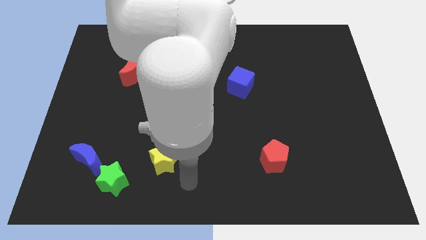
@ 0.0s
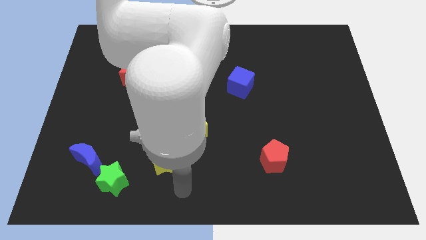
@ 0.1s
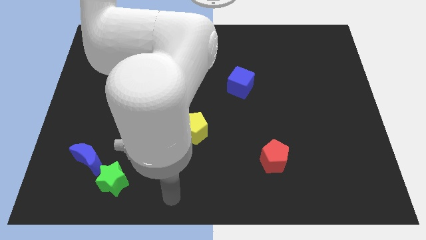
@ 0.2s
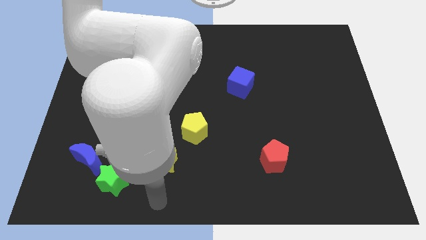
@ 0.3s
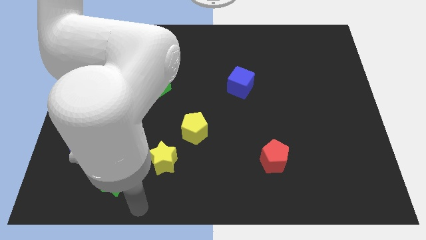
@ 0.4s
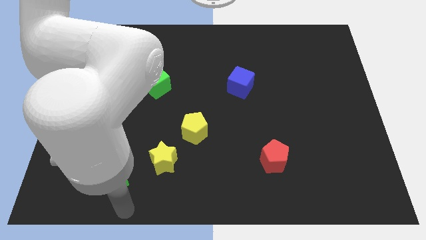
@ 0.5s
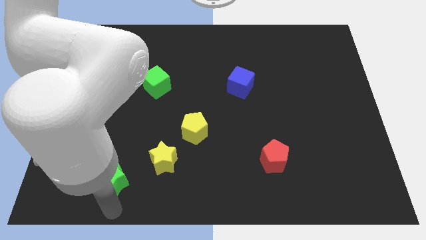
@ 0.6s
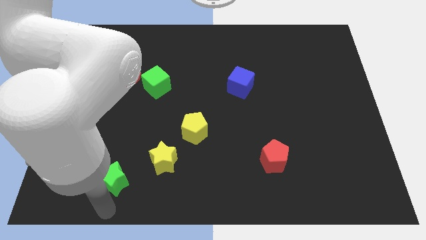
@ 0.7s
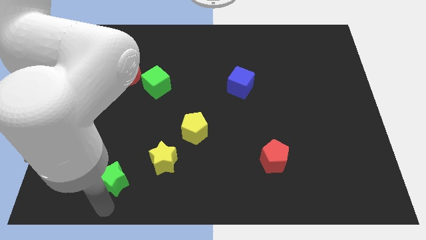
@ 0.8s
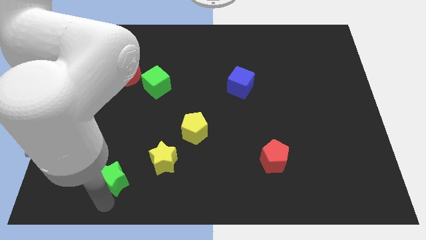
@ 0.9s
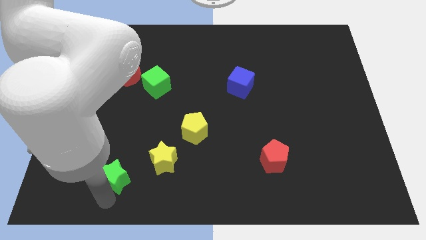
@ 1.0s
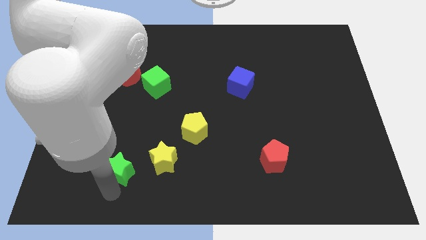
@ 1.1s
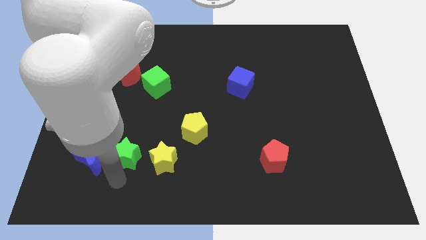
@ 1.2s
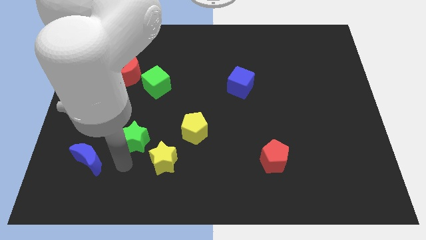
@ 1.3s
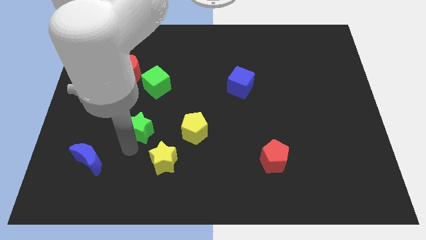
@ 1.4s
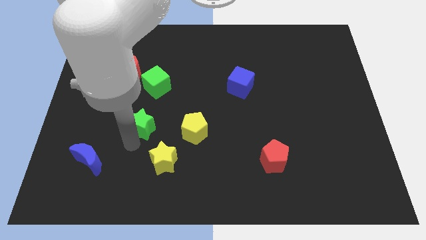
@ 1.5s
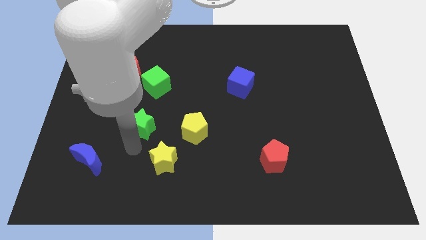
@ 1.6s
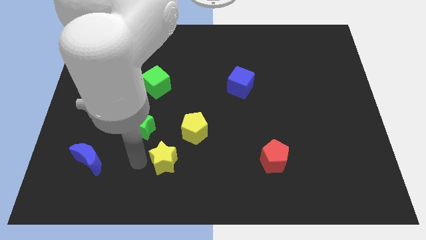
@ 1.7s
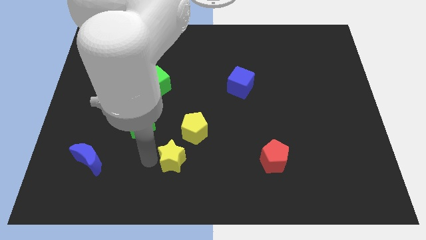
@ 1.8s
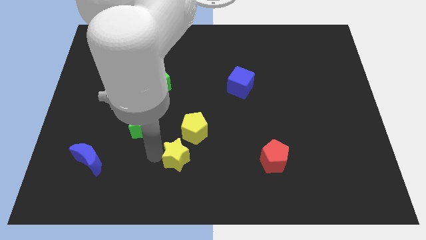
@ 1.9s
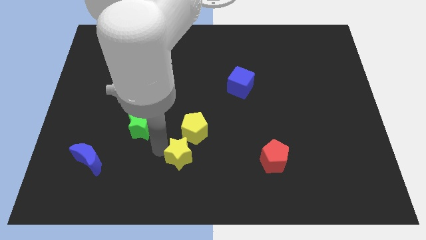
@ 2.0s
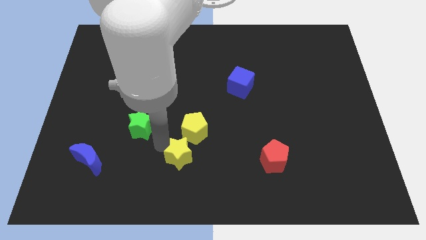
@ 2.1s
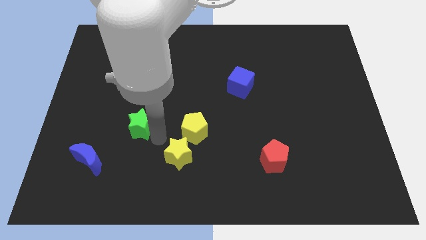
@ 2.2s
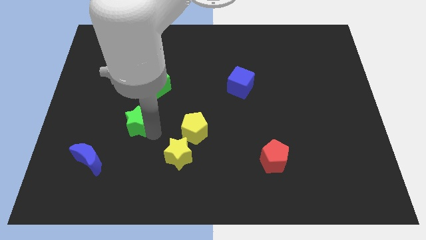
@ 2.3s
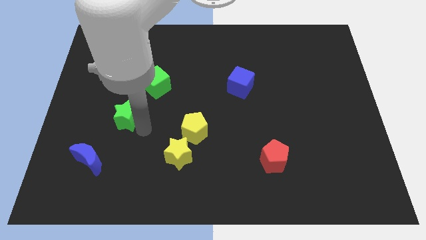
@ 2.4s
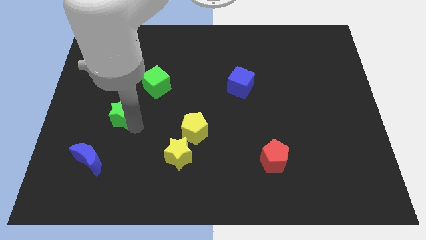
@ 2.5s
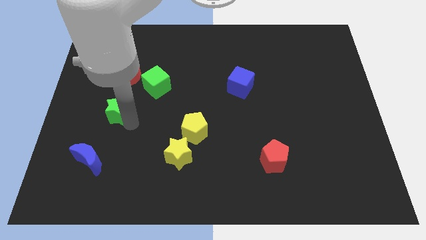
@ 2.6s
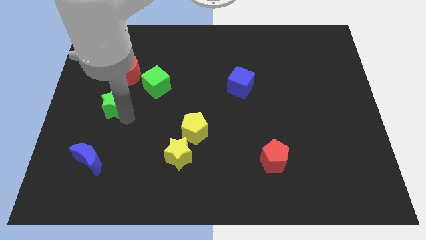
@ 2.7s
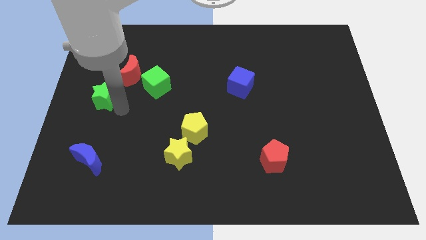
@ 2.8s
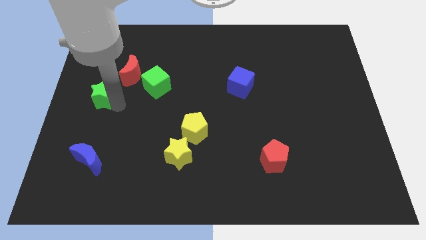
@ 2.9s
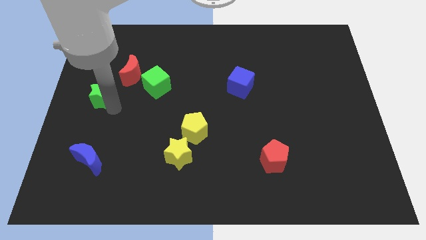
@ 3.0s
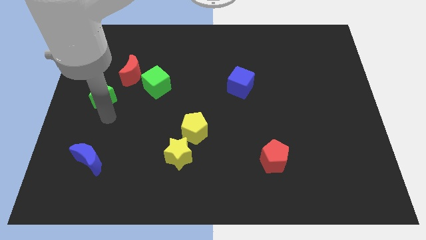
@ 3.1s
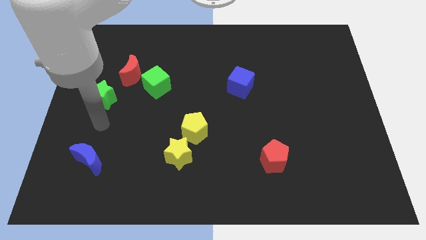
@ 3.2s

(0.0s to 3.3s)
push the green up under red crescent

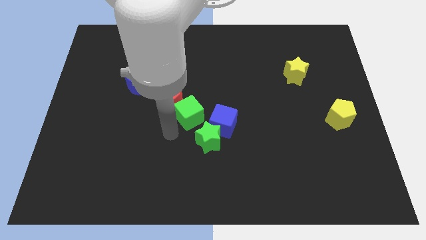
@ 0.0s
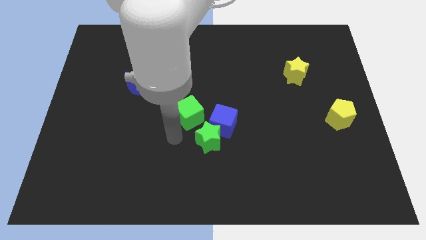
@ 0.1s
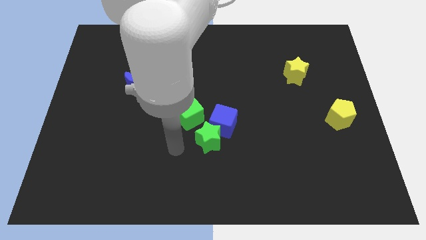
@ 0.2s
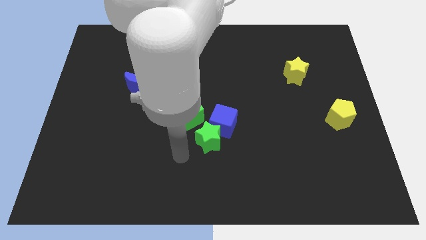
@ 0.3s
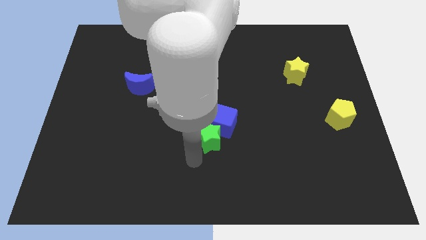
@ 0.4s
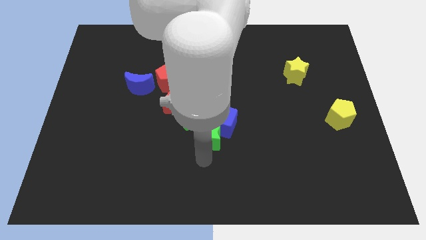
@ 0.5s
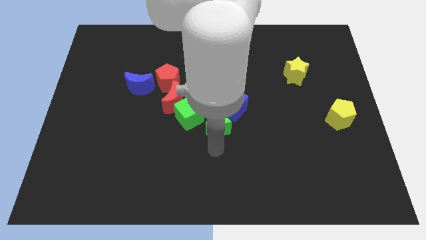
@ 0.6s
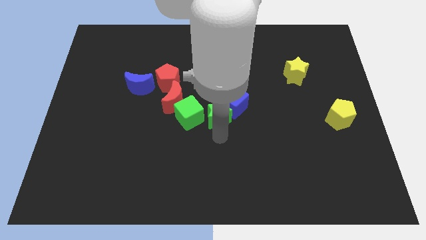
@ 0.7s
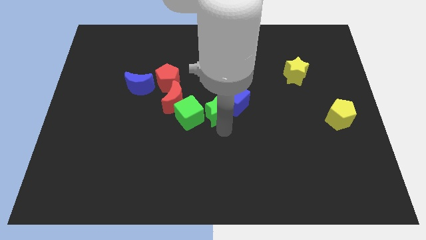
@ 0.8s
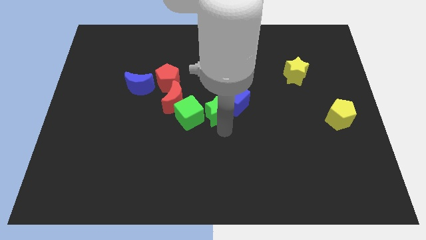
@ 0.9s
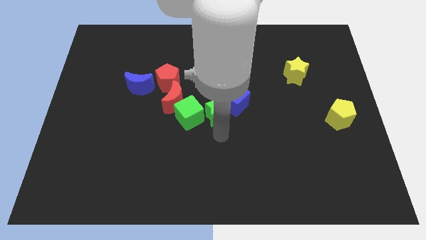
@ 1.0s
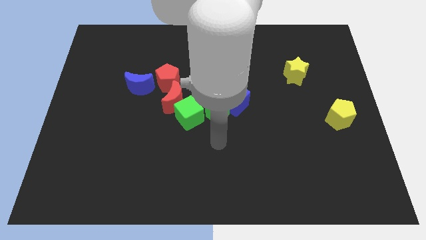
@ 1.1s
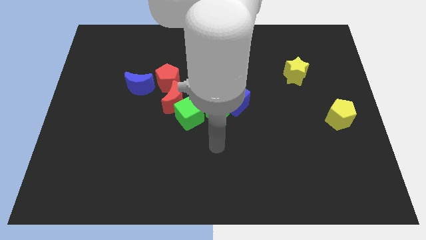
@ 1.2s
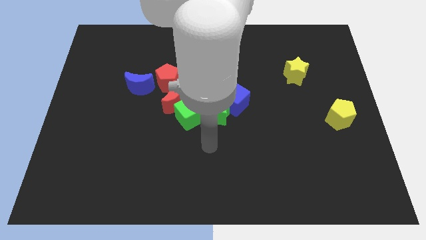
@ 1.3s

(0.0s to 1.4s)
push the green star into the blue cube

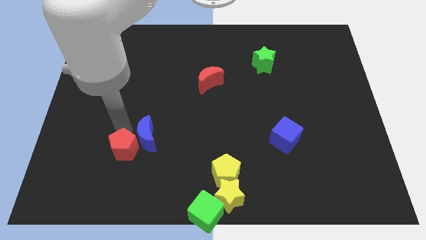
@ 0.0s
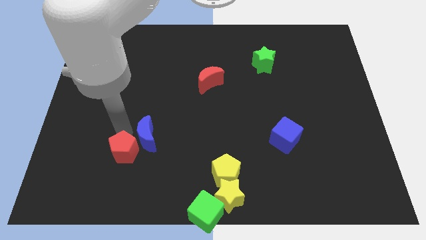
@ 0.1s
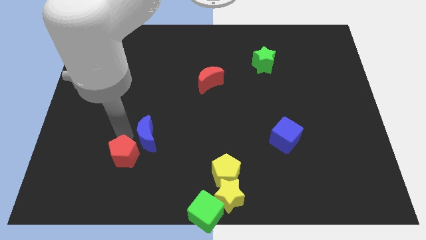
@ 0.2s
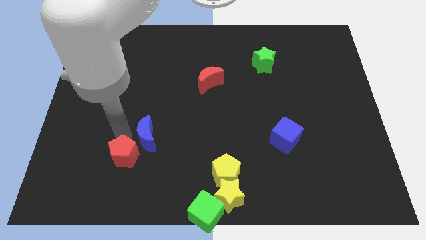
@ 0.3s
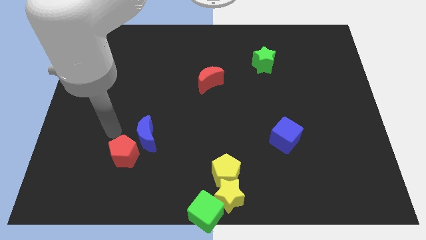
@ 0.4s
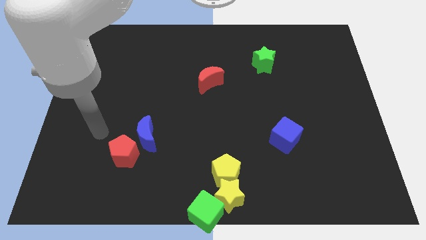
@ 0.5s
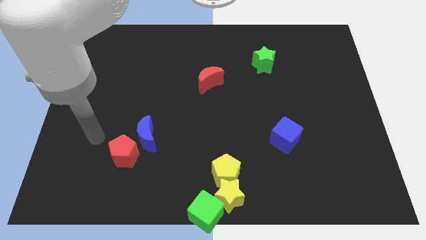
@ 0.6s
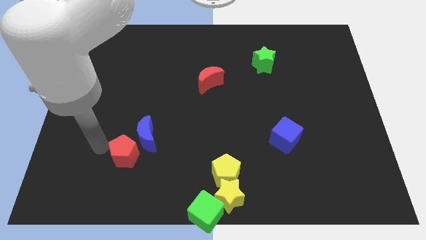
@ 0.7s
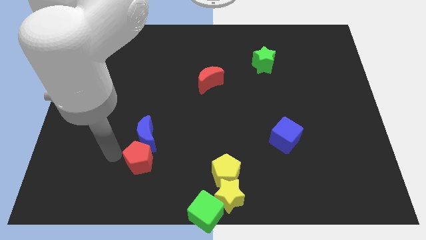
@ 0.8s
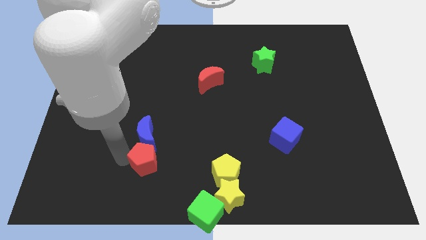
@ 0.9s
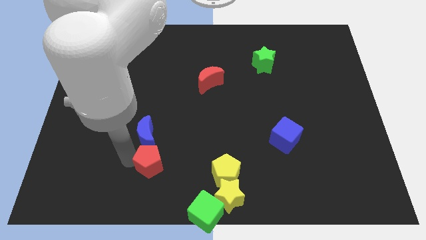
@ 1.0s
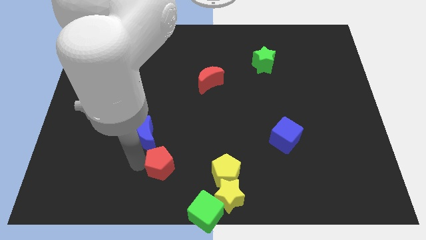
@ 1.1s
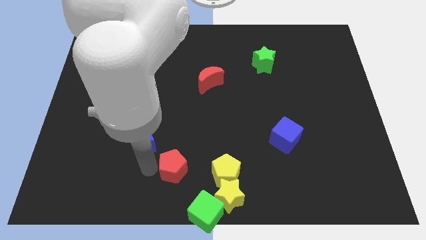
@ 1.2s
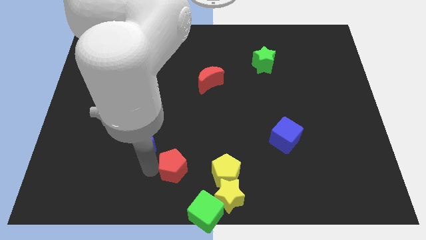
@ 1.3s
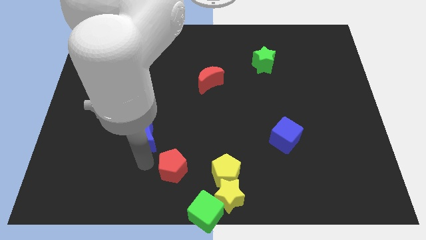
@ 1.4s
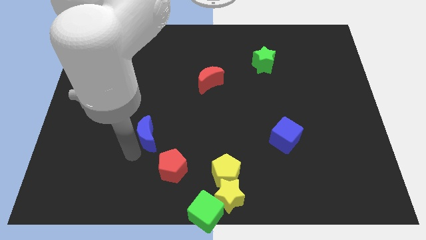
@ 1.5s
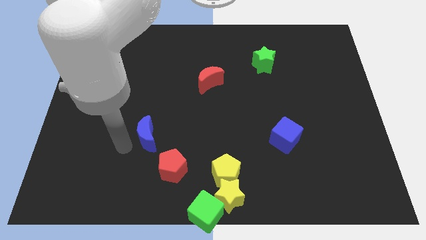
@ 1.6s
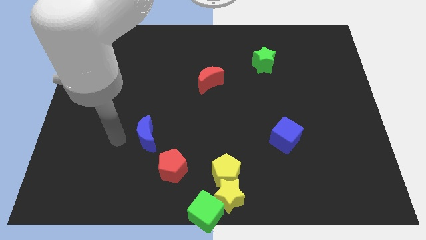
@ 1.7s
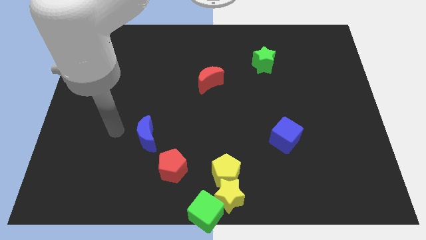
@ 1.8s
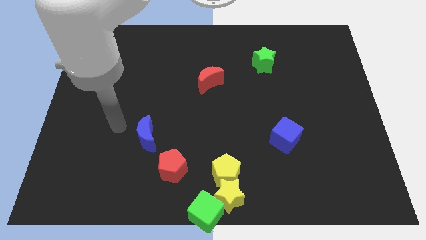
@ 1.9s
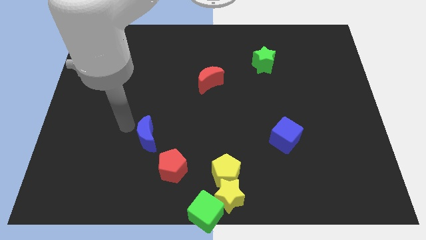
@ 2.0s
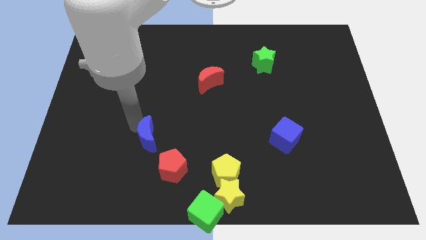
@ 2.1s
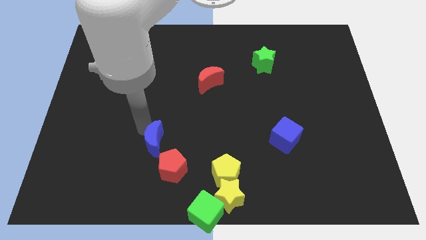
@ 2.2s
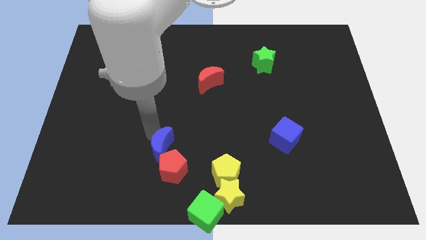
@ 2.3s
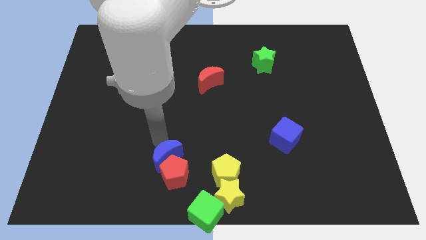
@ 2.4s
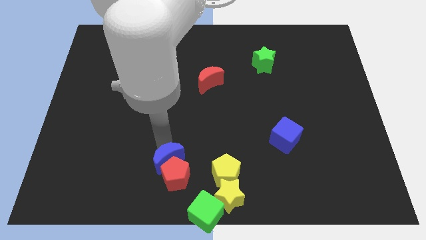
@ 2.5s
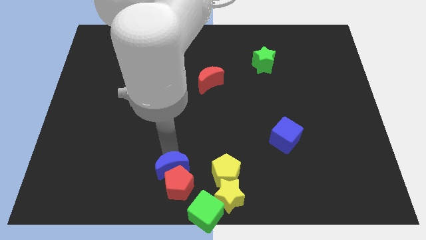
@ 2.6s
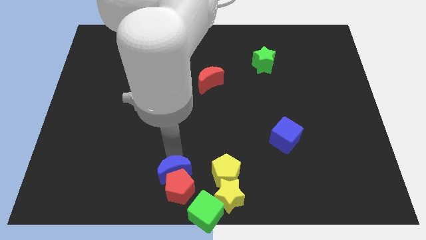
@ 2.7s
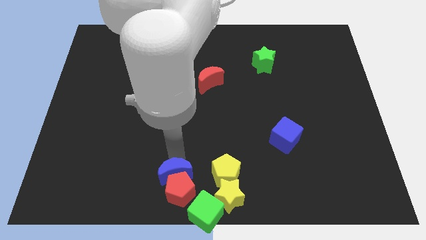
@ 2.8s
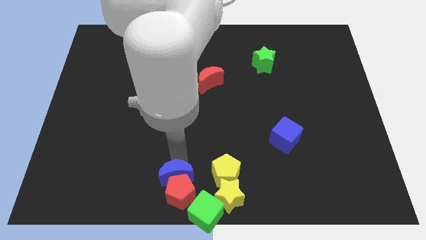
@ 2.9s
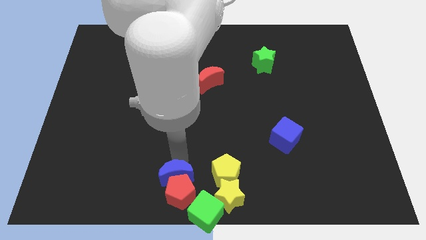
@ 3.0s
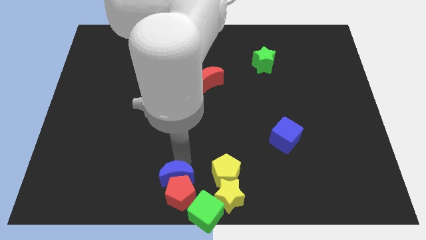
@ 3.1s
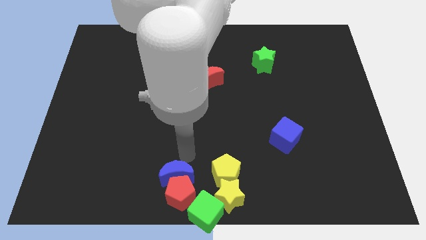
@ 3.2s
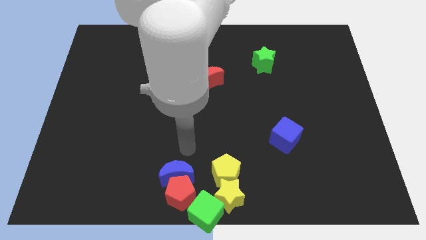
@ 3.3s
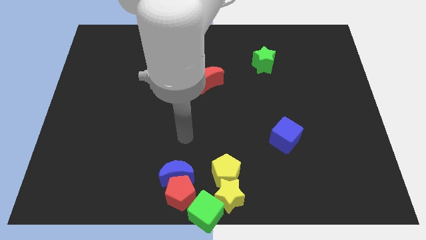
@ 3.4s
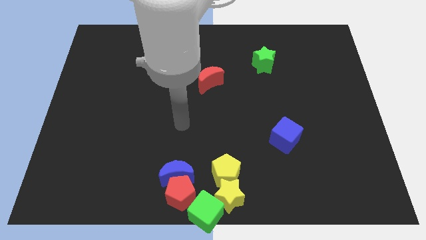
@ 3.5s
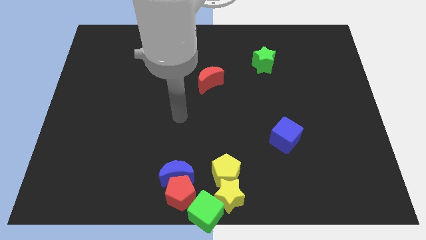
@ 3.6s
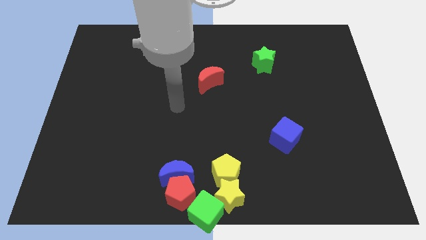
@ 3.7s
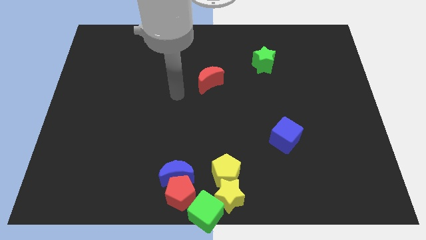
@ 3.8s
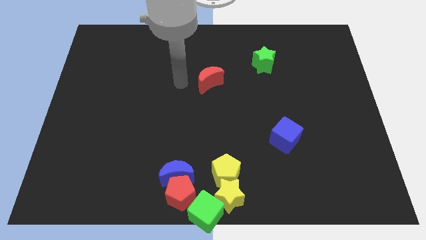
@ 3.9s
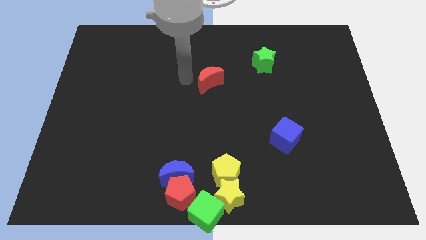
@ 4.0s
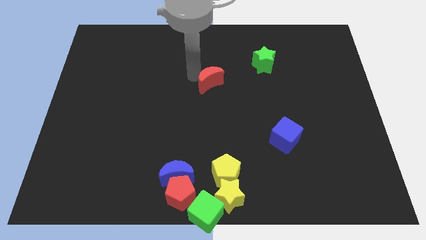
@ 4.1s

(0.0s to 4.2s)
push blue moon and red pentagon towards the bottom of the board
